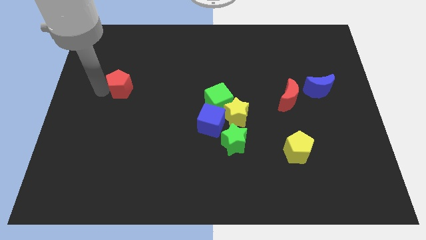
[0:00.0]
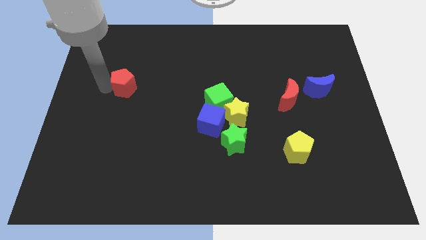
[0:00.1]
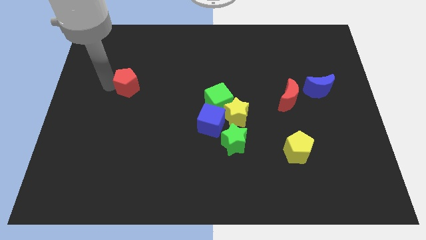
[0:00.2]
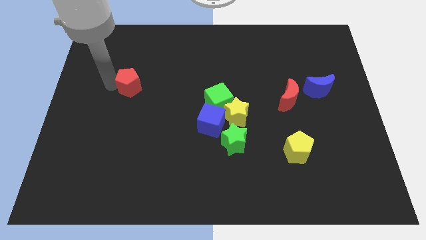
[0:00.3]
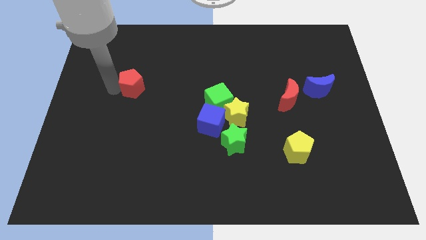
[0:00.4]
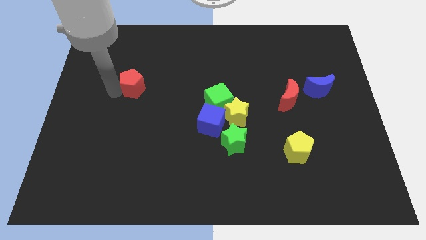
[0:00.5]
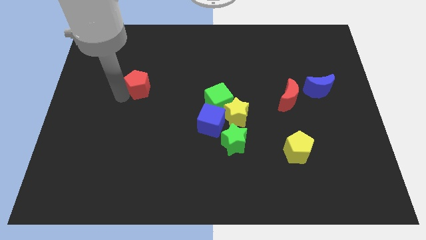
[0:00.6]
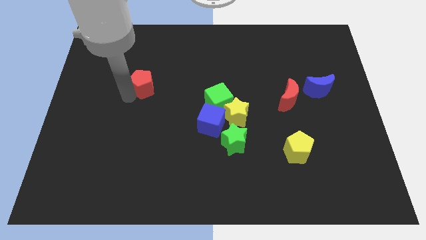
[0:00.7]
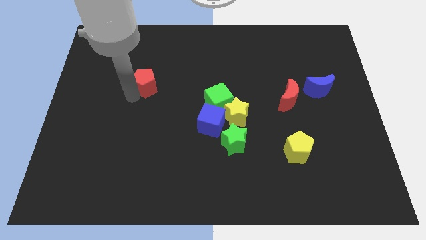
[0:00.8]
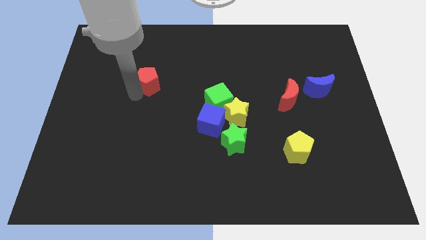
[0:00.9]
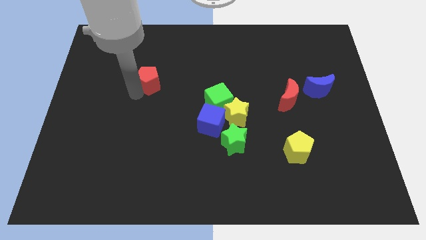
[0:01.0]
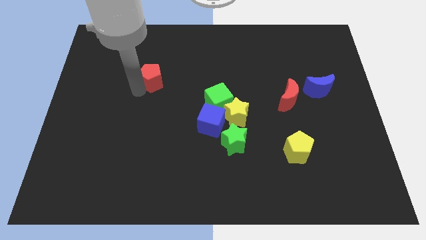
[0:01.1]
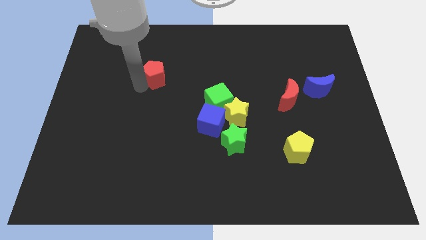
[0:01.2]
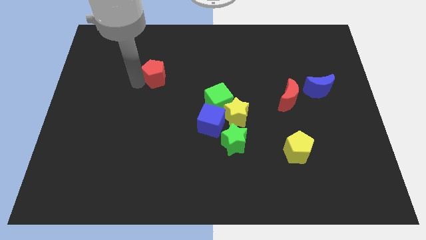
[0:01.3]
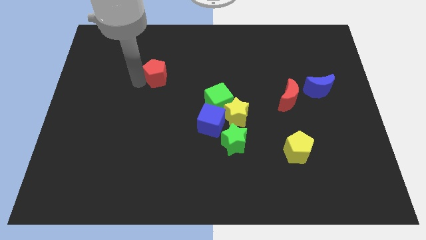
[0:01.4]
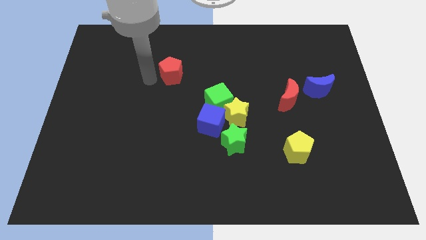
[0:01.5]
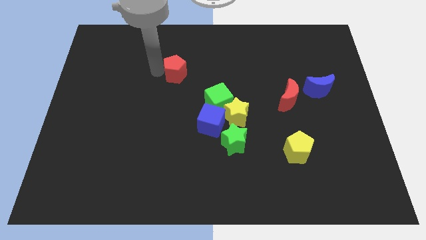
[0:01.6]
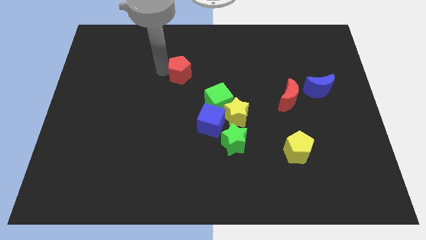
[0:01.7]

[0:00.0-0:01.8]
move red pentagon diagonally on the top left side of the green cube

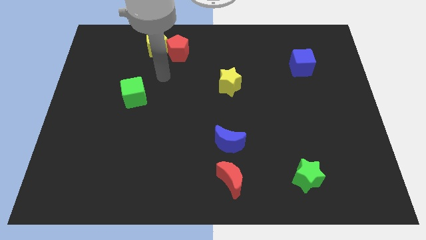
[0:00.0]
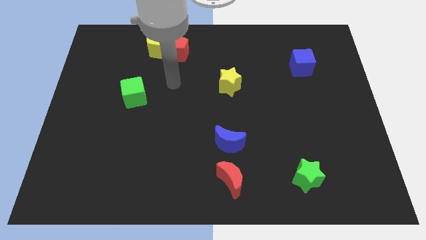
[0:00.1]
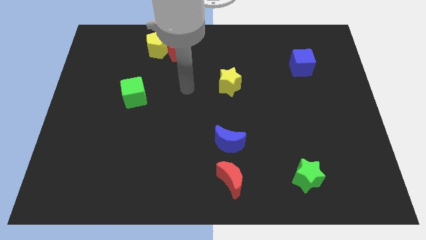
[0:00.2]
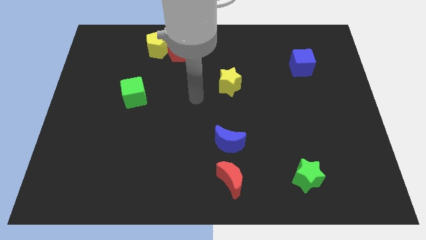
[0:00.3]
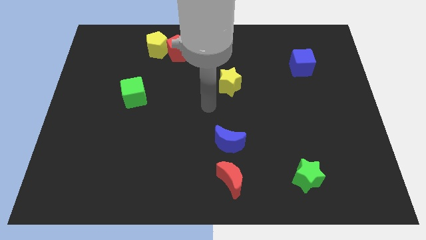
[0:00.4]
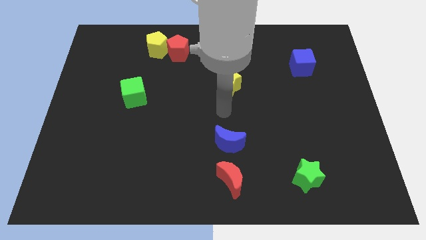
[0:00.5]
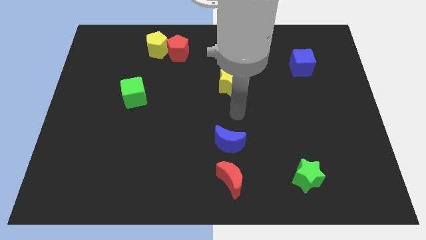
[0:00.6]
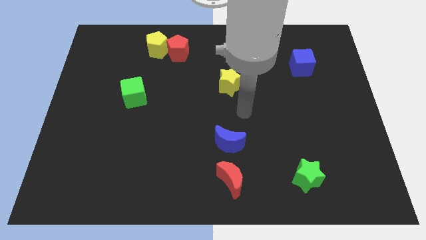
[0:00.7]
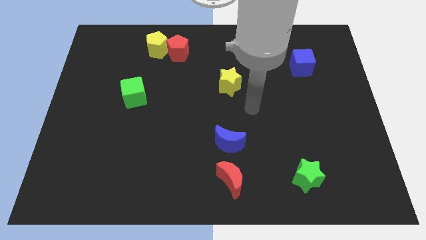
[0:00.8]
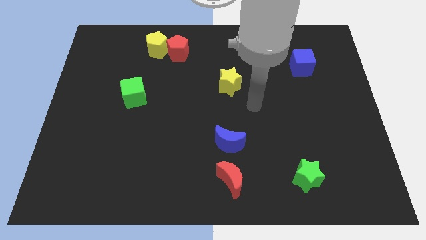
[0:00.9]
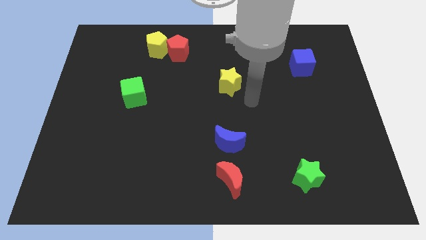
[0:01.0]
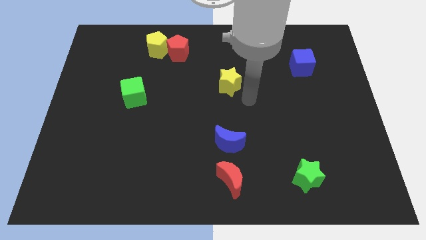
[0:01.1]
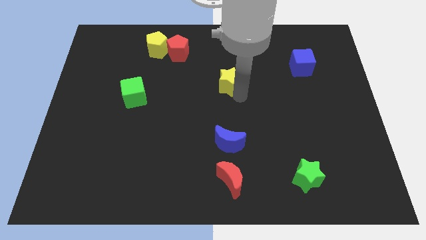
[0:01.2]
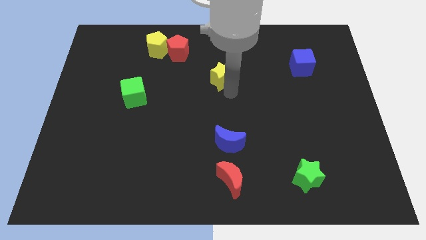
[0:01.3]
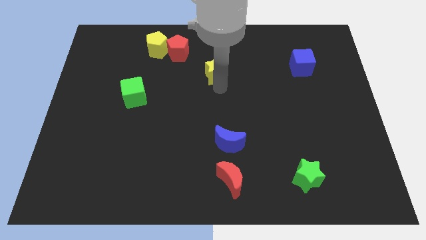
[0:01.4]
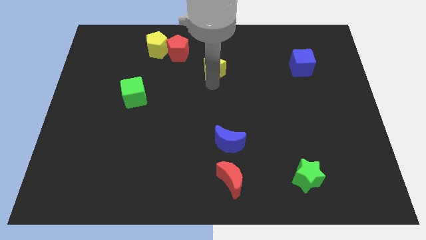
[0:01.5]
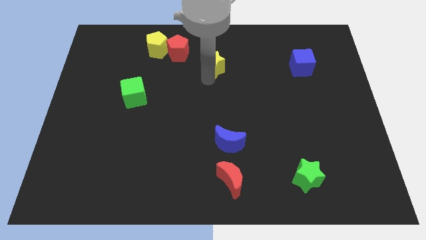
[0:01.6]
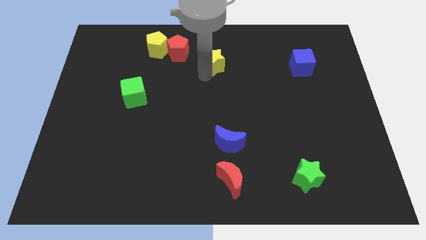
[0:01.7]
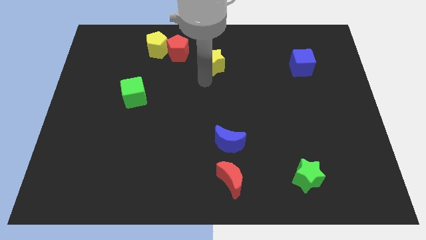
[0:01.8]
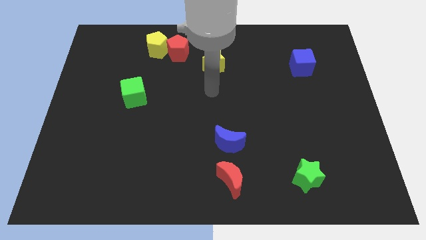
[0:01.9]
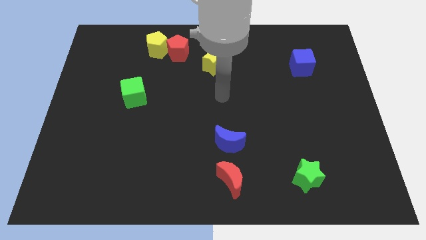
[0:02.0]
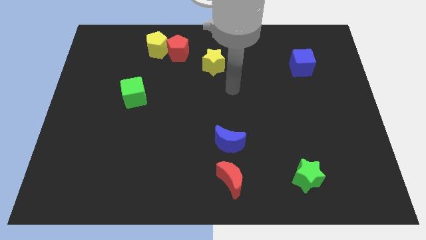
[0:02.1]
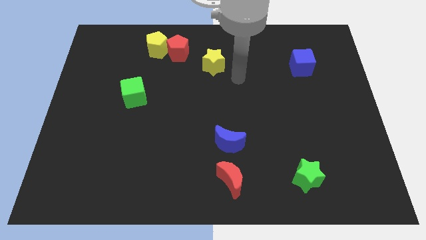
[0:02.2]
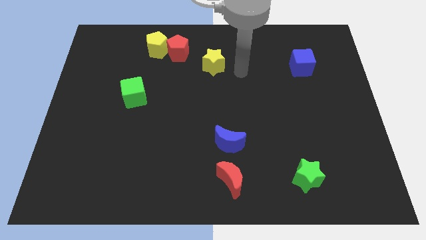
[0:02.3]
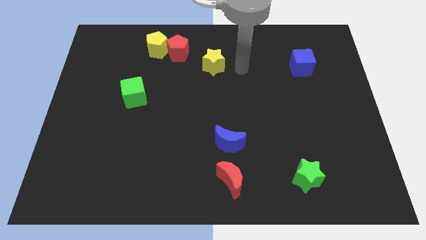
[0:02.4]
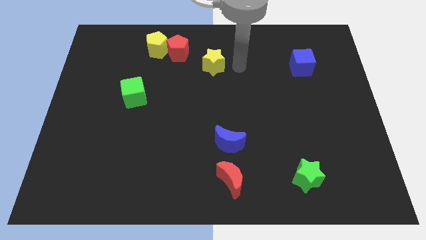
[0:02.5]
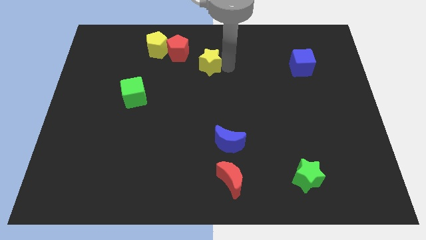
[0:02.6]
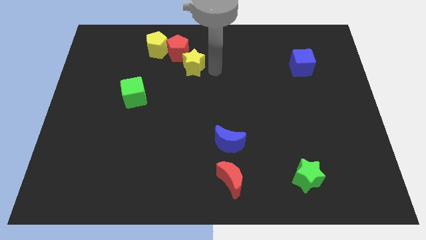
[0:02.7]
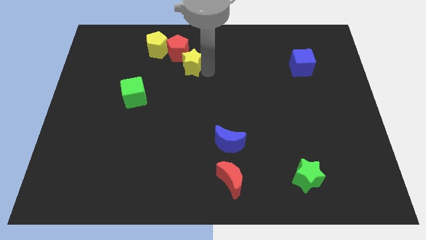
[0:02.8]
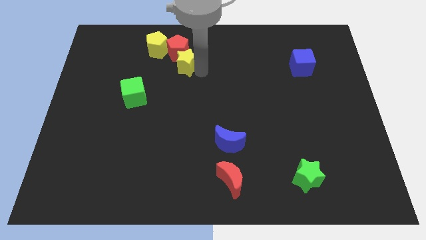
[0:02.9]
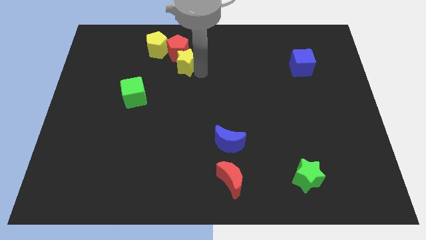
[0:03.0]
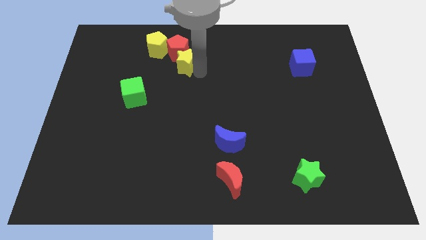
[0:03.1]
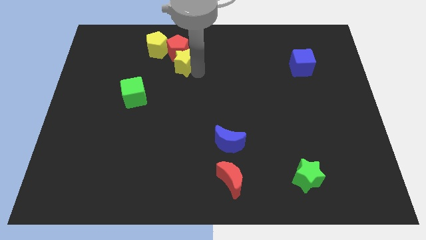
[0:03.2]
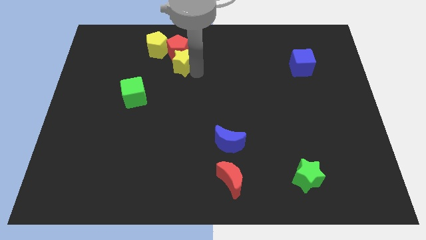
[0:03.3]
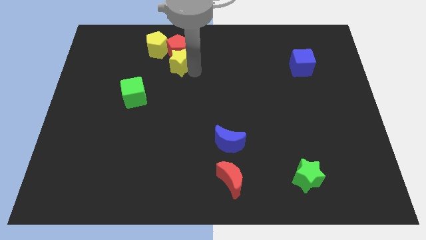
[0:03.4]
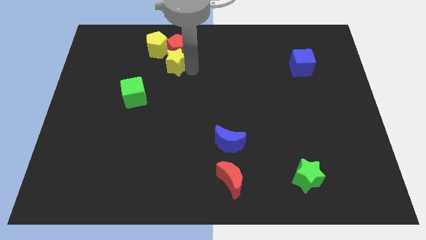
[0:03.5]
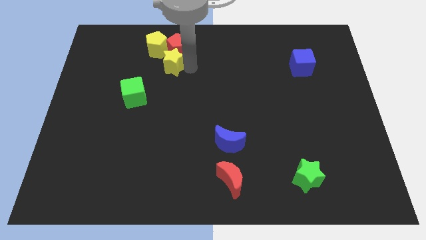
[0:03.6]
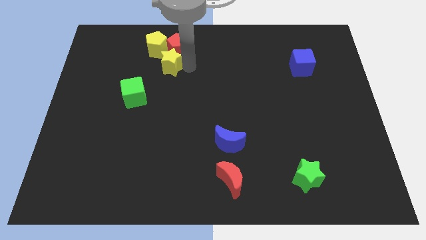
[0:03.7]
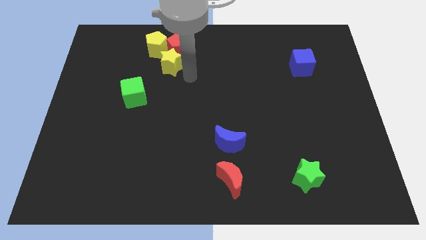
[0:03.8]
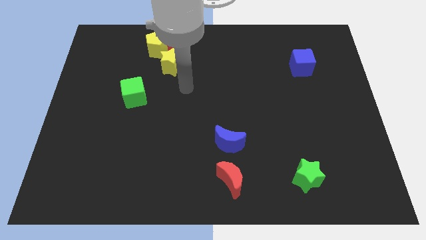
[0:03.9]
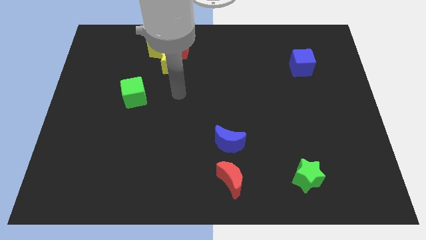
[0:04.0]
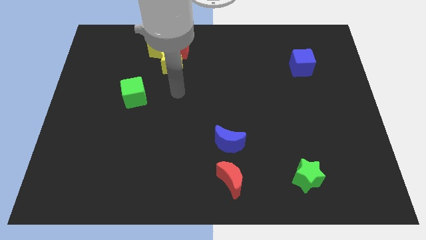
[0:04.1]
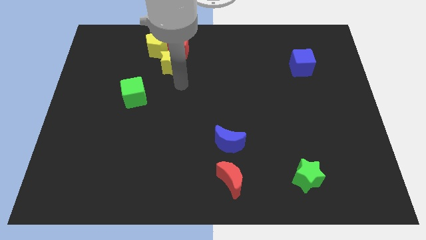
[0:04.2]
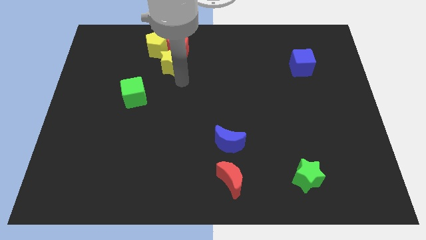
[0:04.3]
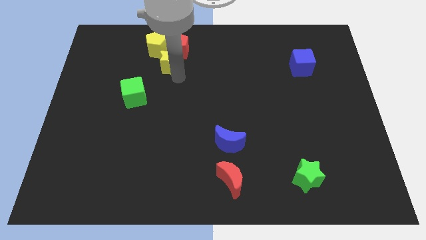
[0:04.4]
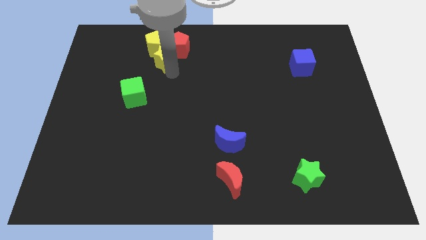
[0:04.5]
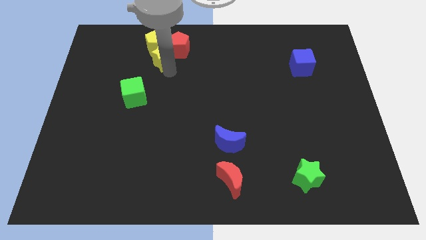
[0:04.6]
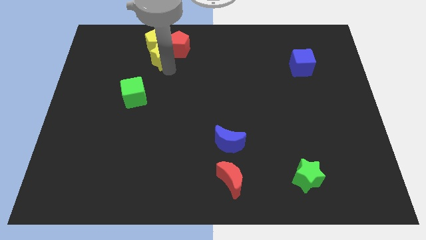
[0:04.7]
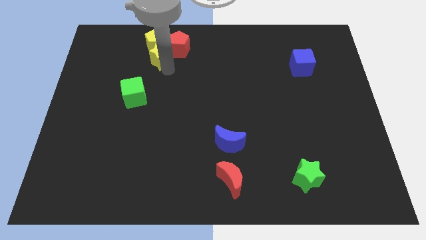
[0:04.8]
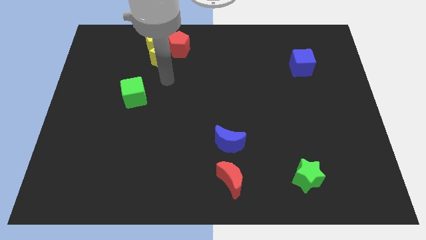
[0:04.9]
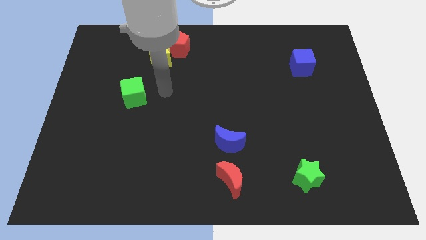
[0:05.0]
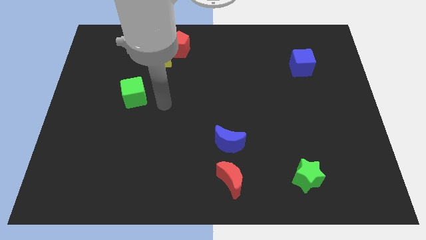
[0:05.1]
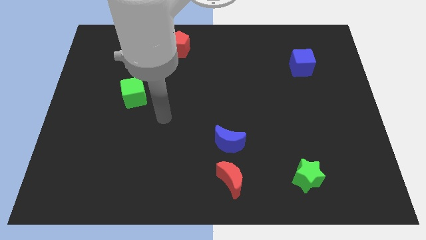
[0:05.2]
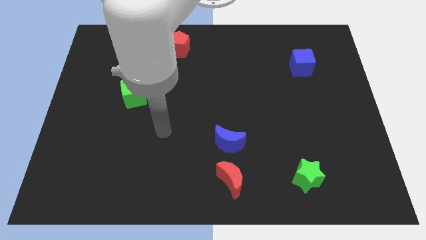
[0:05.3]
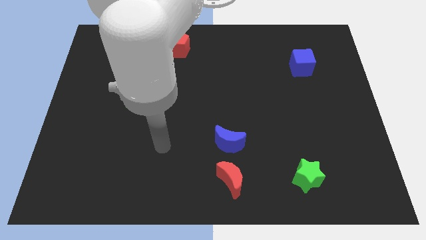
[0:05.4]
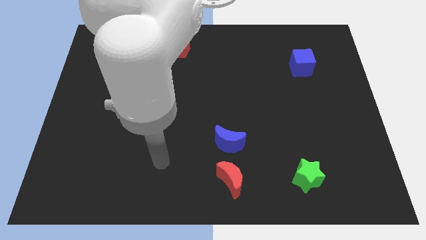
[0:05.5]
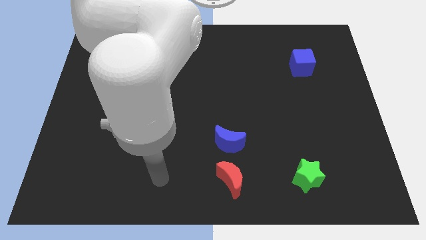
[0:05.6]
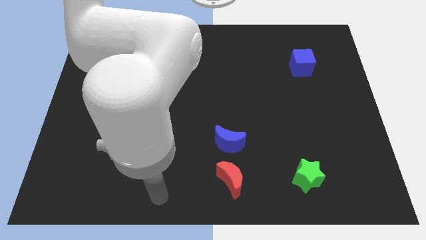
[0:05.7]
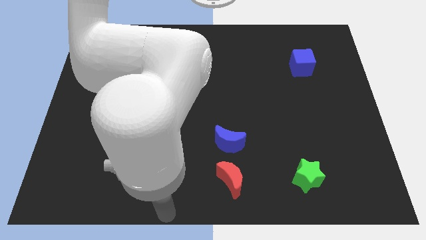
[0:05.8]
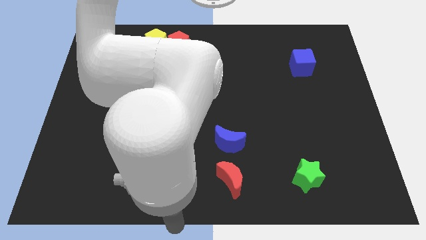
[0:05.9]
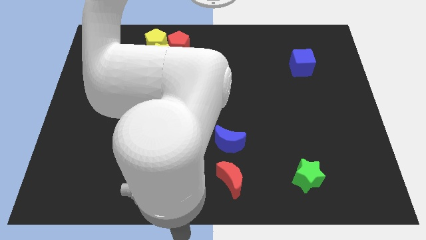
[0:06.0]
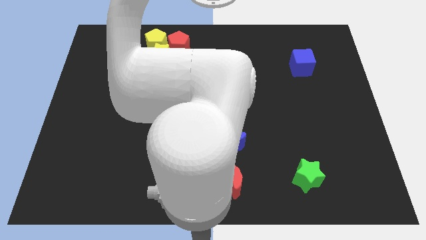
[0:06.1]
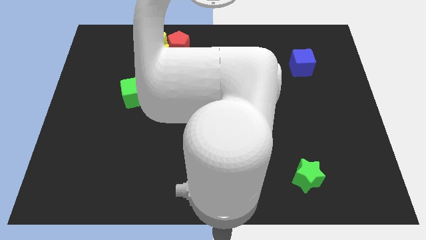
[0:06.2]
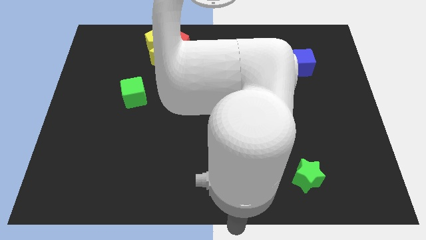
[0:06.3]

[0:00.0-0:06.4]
move the yellow star towards the yellow pentagon and the red pentagon

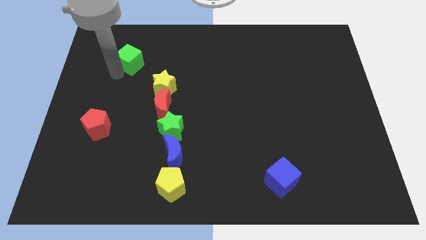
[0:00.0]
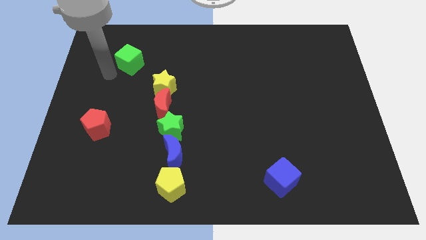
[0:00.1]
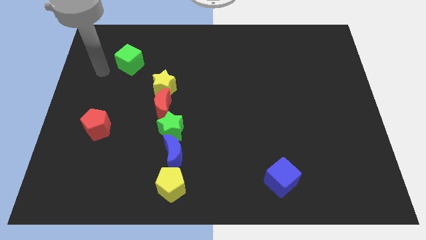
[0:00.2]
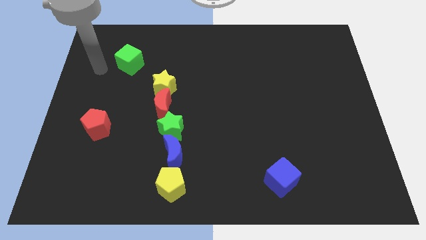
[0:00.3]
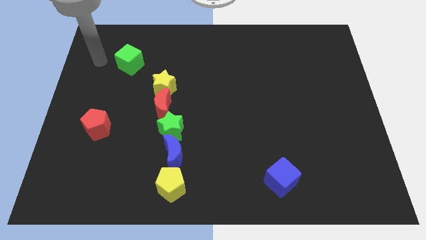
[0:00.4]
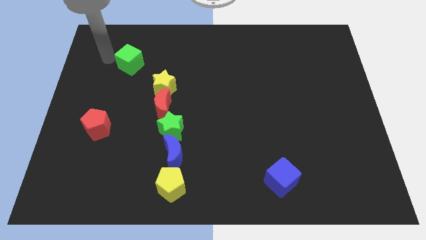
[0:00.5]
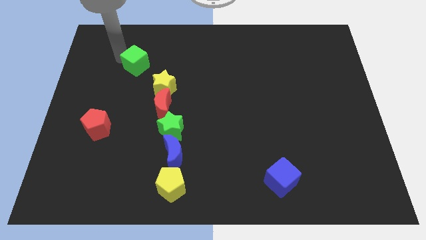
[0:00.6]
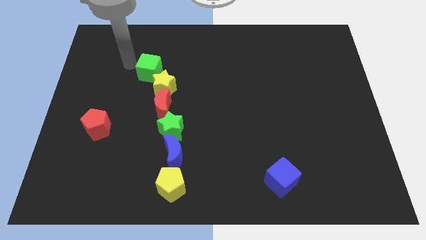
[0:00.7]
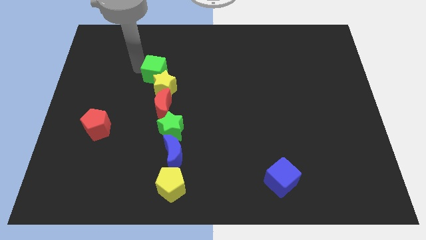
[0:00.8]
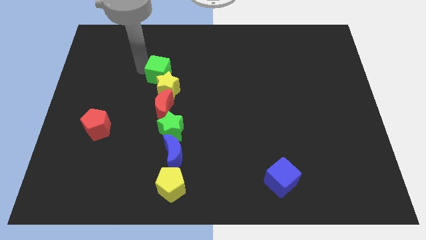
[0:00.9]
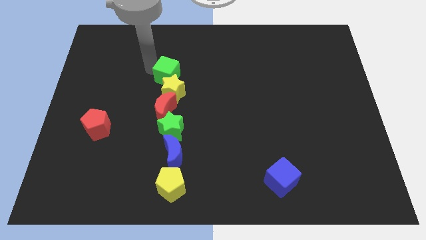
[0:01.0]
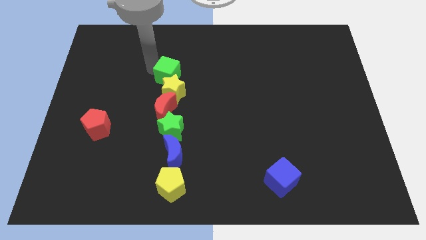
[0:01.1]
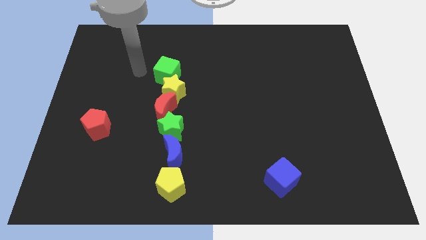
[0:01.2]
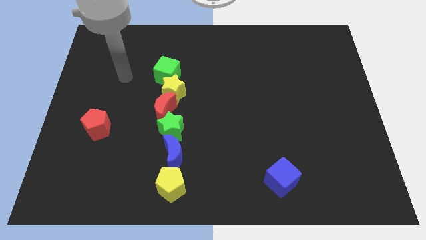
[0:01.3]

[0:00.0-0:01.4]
push the green cube into the yellow star
